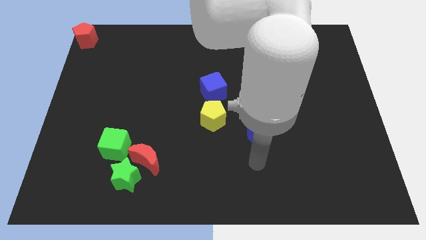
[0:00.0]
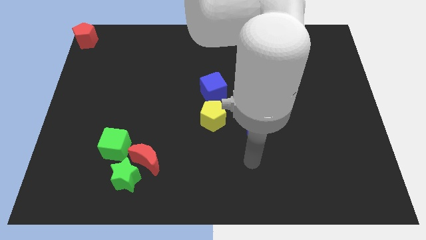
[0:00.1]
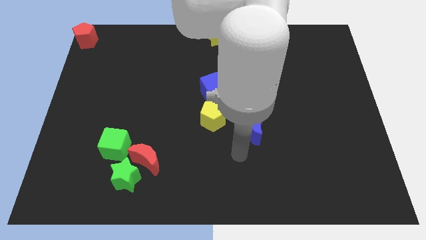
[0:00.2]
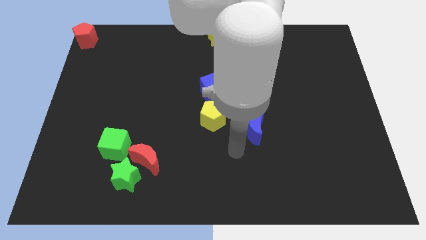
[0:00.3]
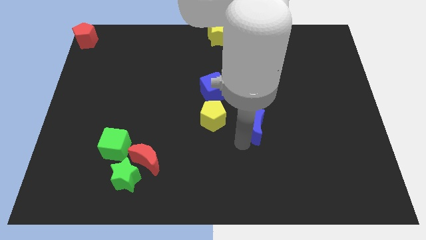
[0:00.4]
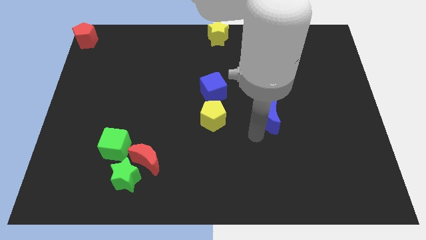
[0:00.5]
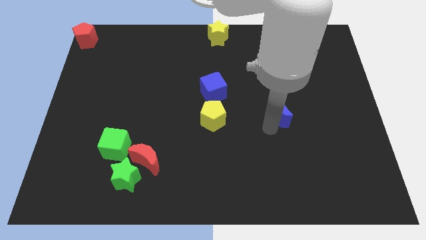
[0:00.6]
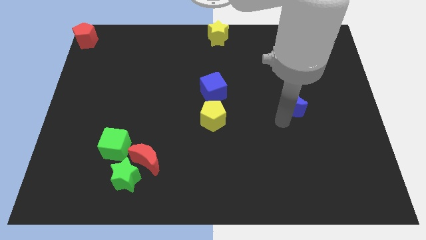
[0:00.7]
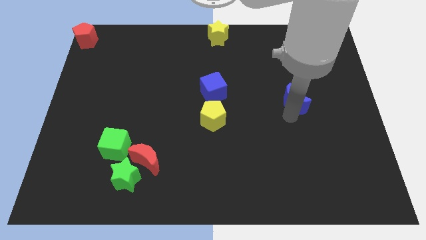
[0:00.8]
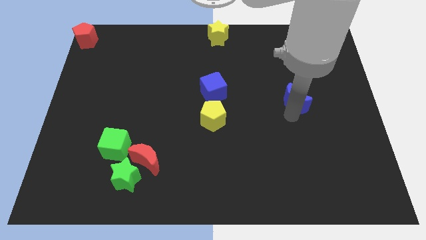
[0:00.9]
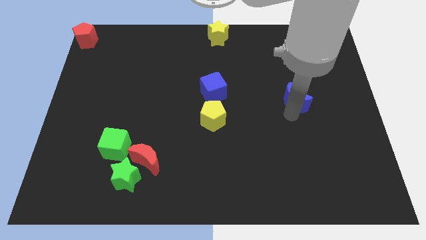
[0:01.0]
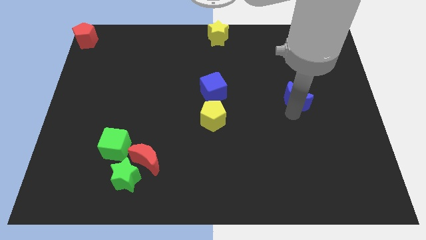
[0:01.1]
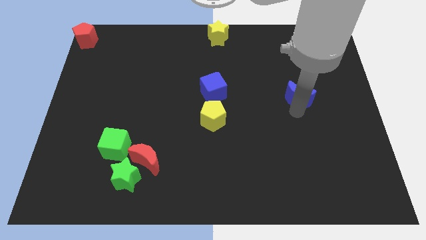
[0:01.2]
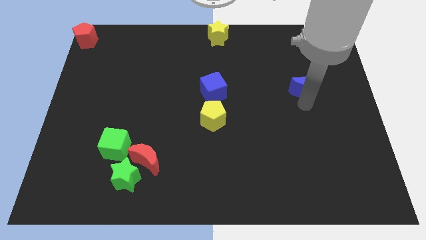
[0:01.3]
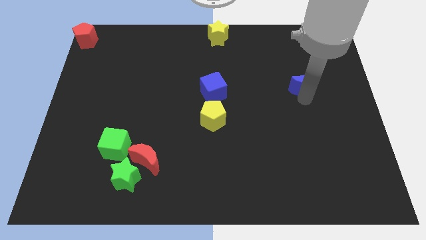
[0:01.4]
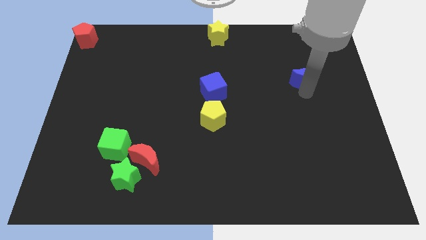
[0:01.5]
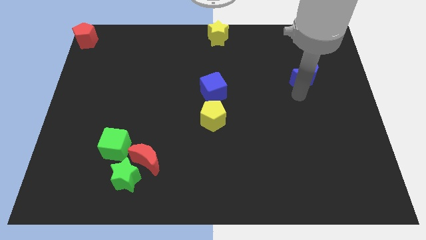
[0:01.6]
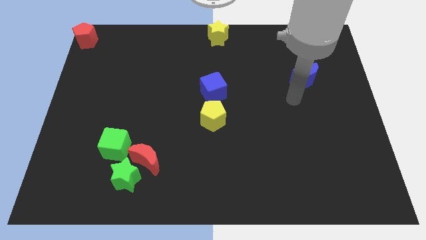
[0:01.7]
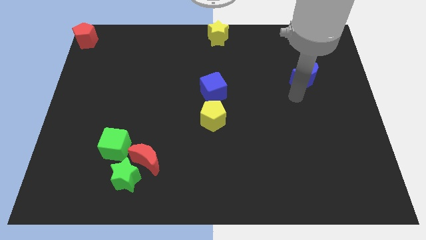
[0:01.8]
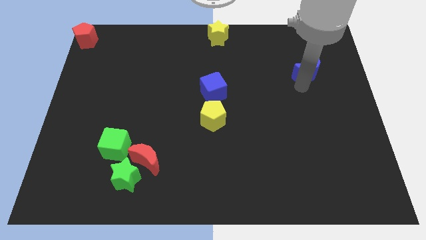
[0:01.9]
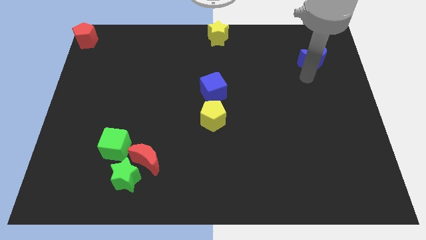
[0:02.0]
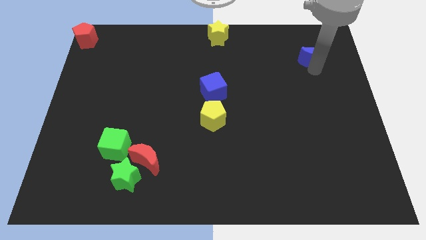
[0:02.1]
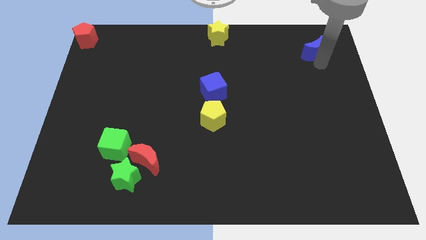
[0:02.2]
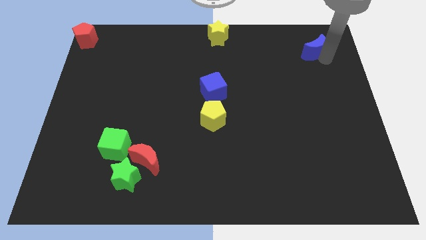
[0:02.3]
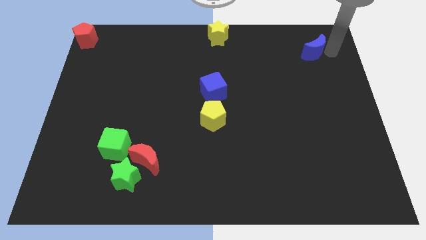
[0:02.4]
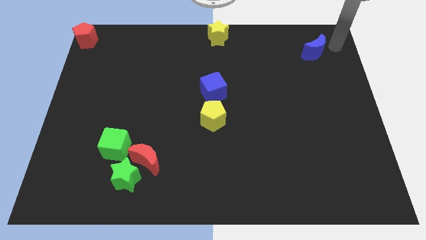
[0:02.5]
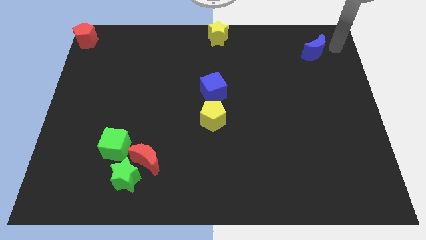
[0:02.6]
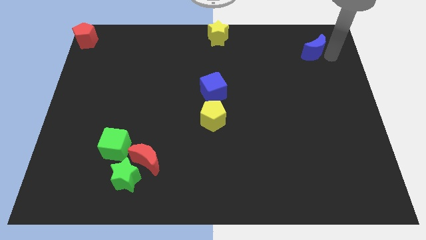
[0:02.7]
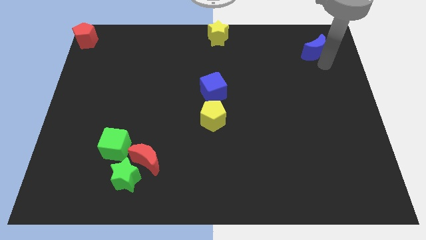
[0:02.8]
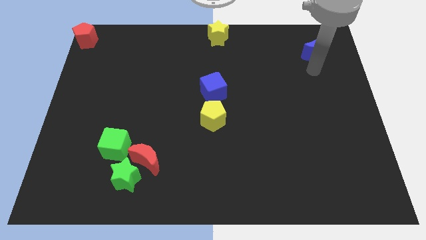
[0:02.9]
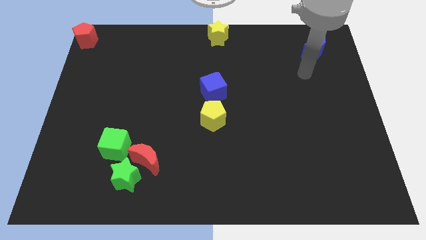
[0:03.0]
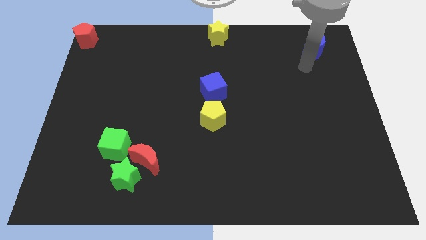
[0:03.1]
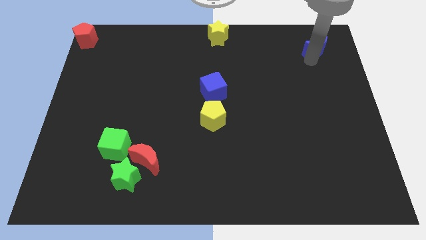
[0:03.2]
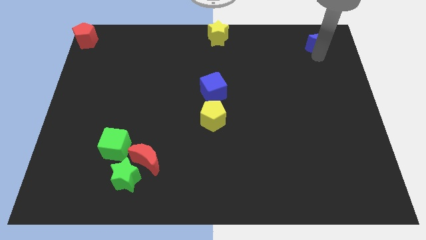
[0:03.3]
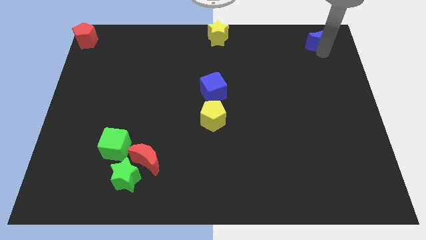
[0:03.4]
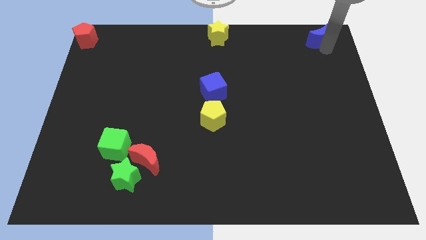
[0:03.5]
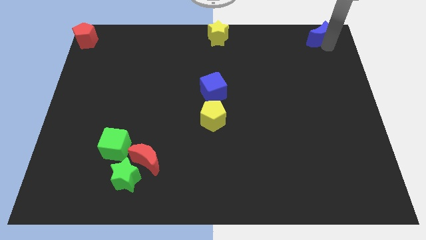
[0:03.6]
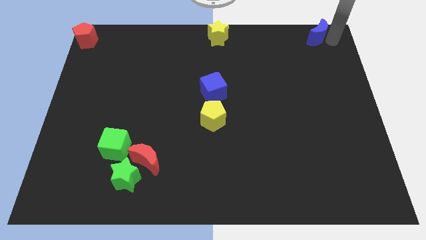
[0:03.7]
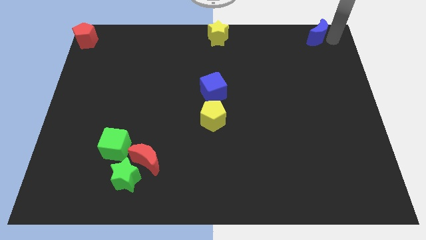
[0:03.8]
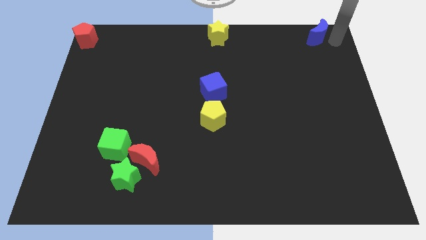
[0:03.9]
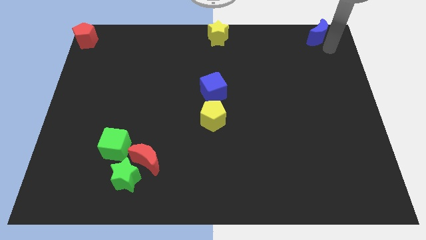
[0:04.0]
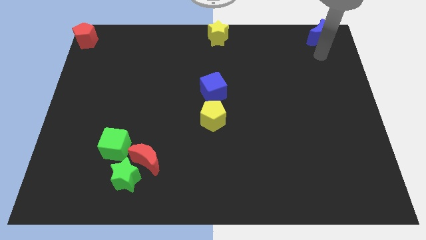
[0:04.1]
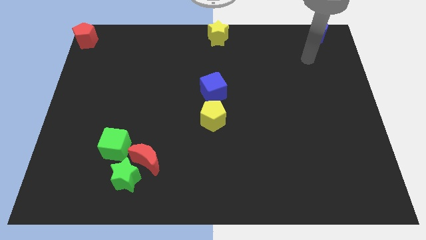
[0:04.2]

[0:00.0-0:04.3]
push the blue crescent to the top right corner of the board

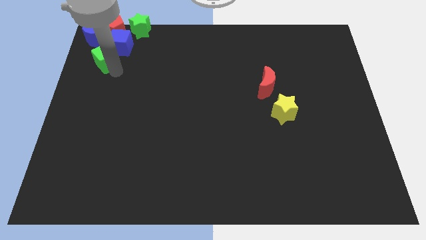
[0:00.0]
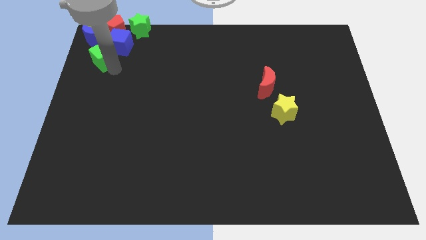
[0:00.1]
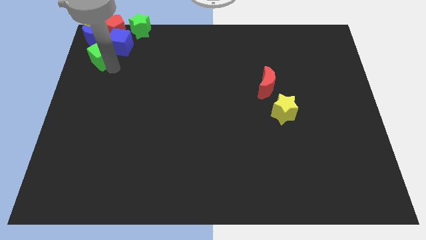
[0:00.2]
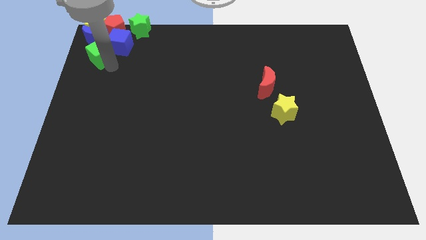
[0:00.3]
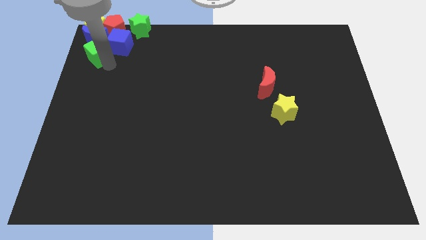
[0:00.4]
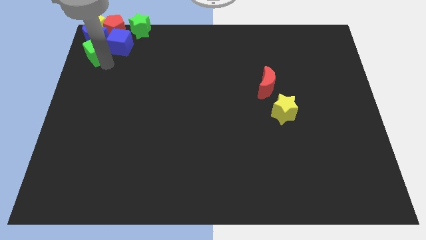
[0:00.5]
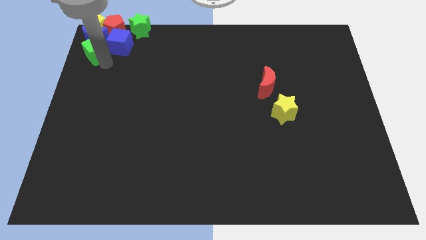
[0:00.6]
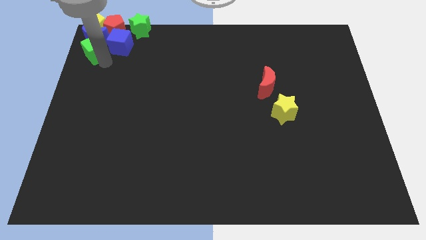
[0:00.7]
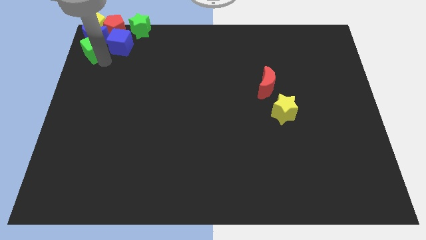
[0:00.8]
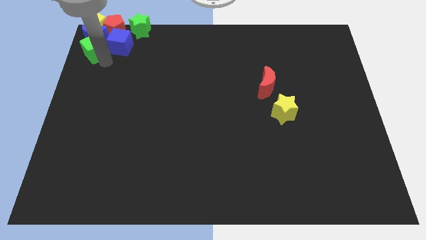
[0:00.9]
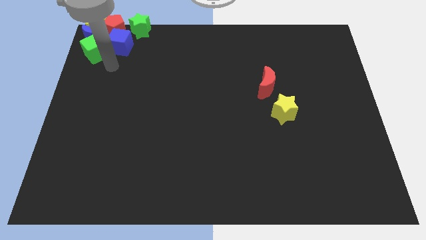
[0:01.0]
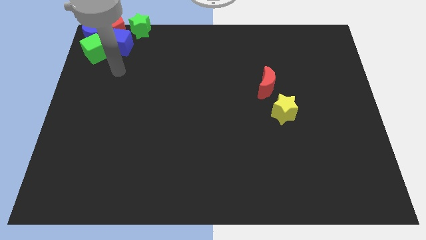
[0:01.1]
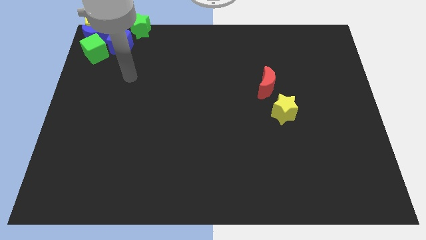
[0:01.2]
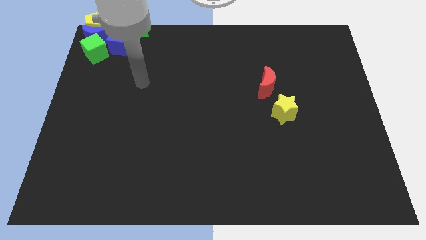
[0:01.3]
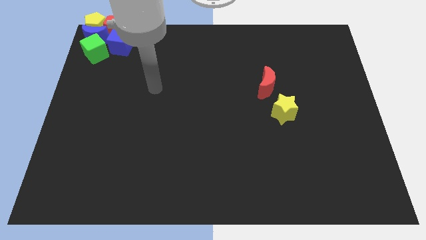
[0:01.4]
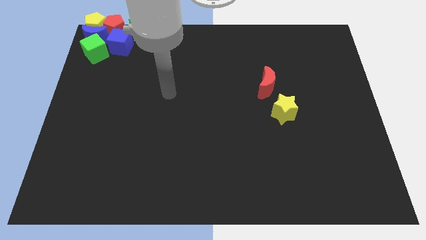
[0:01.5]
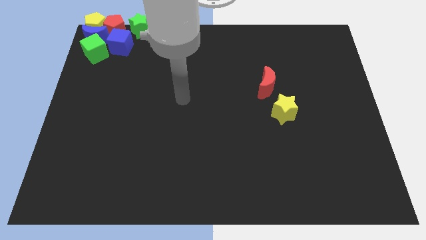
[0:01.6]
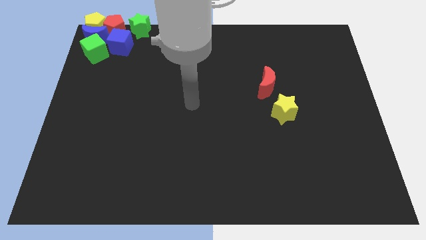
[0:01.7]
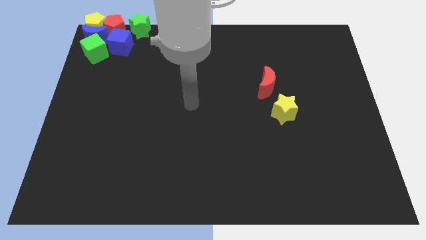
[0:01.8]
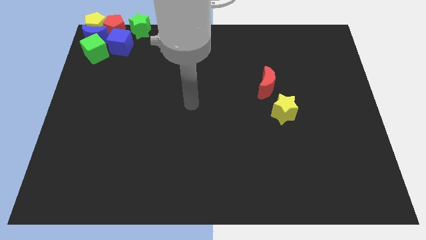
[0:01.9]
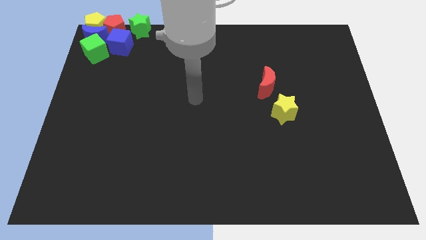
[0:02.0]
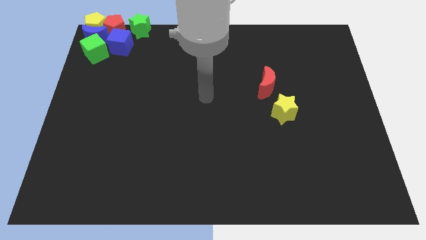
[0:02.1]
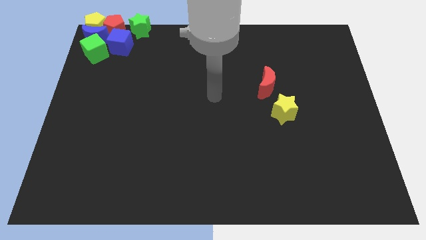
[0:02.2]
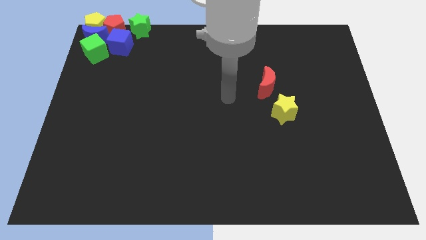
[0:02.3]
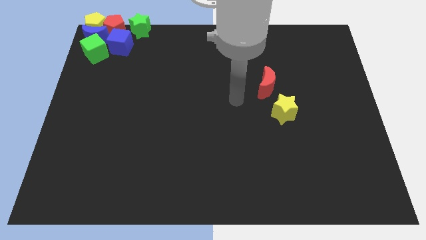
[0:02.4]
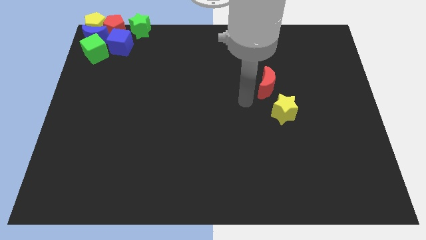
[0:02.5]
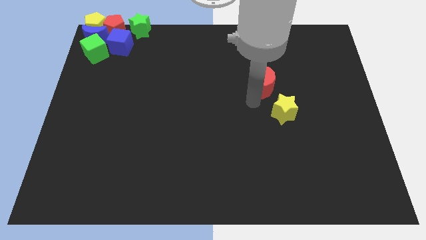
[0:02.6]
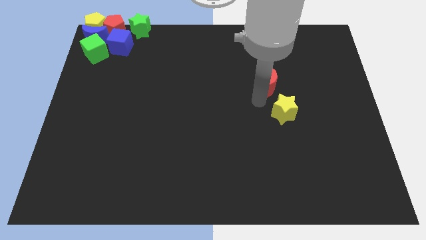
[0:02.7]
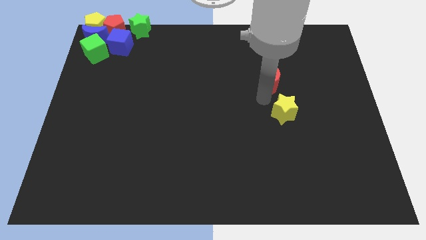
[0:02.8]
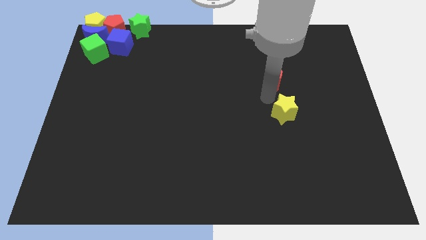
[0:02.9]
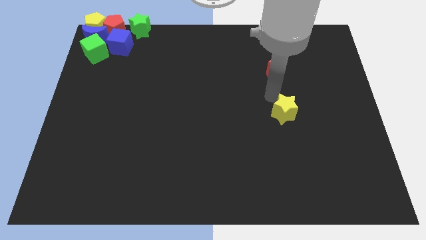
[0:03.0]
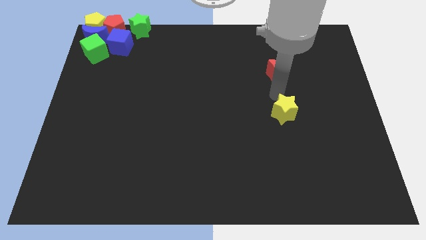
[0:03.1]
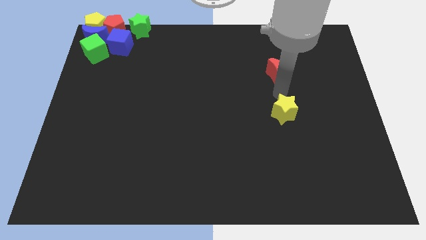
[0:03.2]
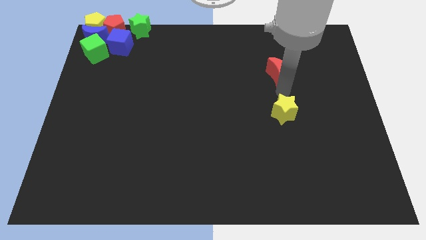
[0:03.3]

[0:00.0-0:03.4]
move your arm to the red moon

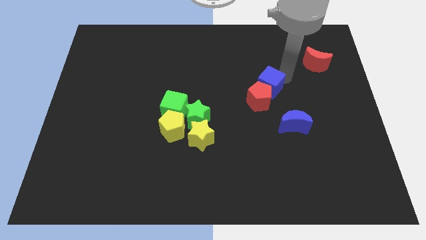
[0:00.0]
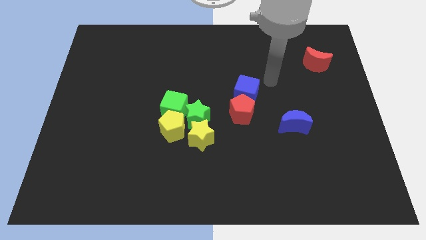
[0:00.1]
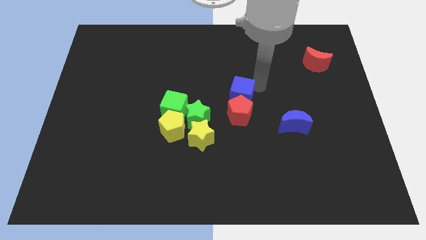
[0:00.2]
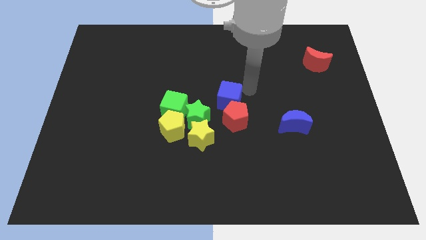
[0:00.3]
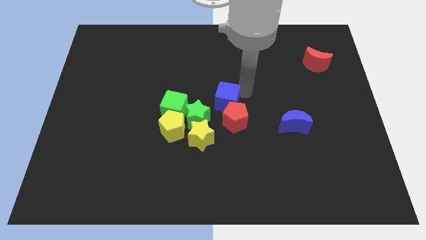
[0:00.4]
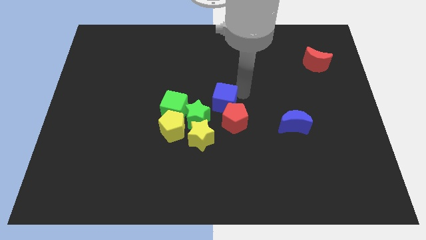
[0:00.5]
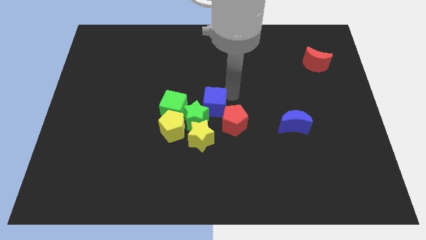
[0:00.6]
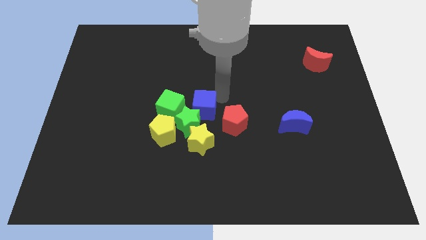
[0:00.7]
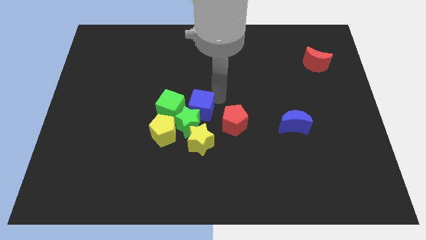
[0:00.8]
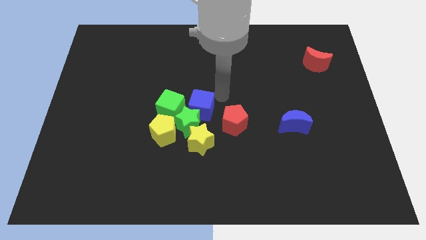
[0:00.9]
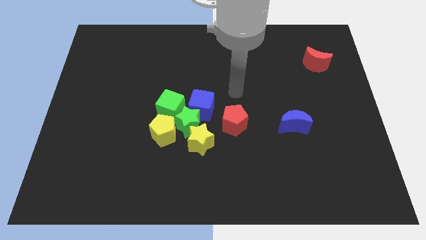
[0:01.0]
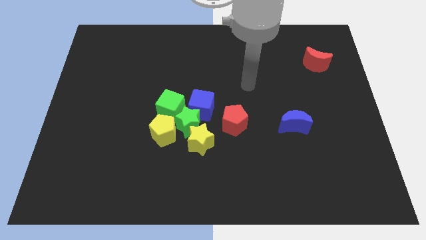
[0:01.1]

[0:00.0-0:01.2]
push the blue cube to the right of the green star

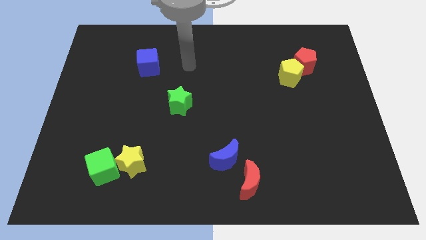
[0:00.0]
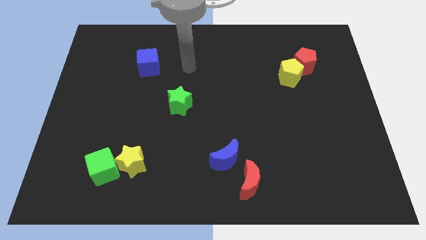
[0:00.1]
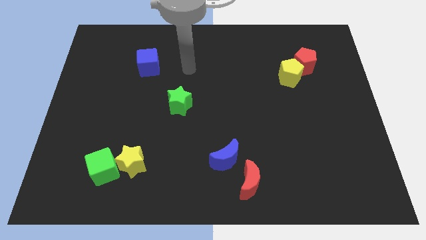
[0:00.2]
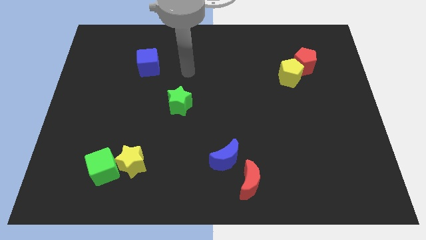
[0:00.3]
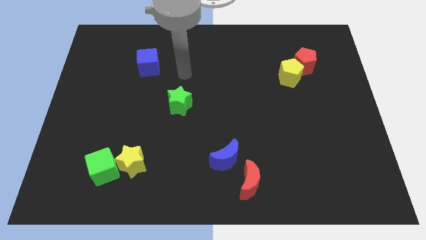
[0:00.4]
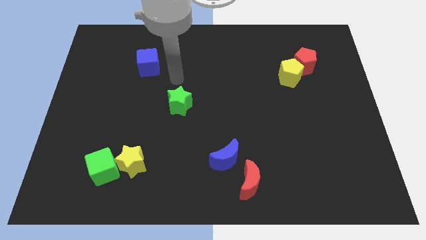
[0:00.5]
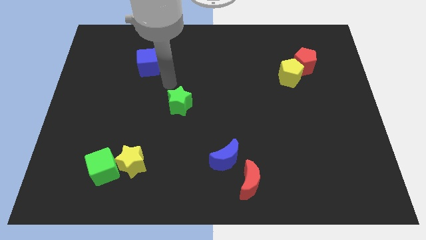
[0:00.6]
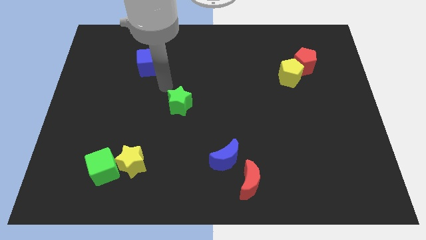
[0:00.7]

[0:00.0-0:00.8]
move your arm to the top of green star
